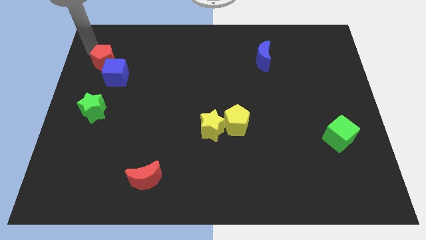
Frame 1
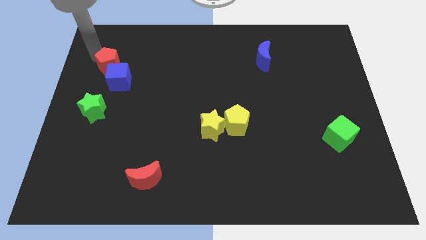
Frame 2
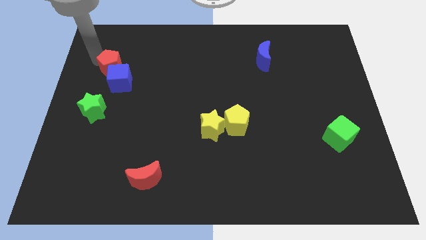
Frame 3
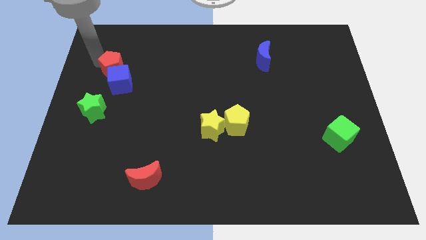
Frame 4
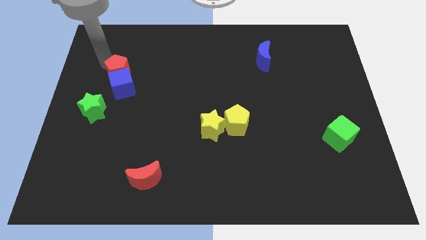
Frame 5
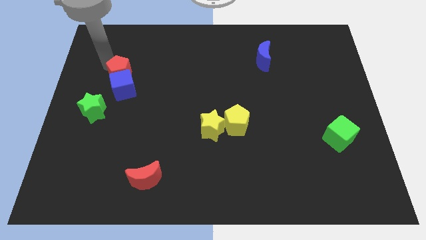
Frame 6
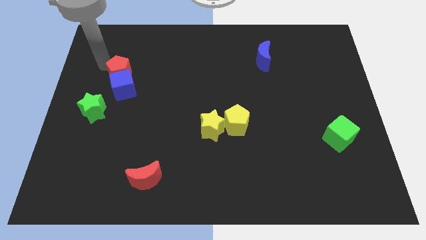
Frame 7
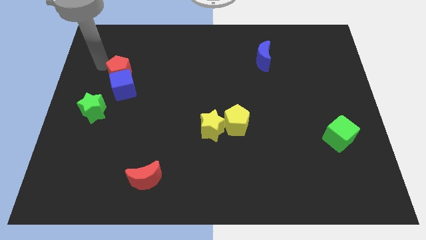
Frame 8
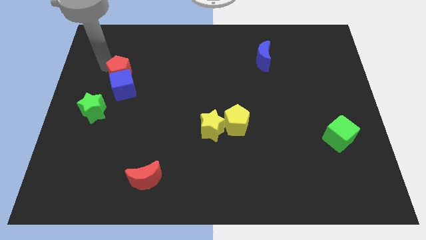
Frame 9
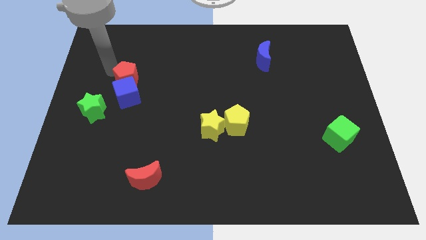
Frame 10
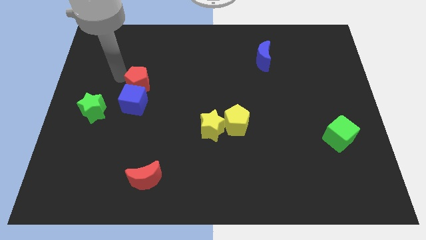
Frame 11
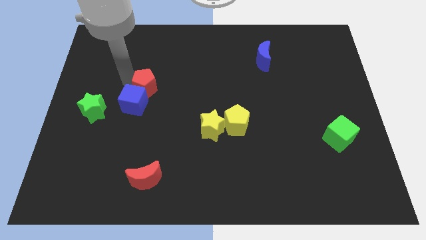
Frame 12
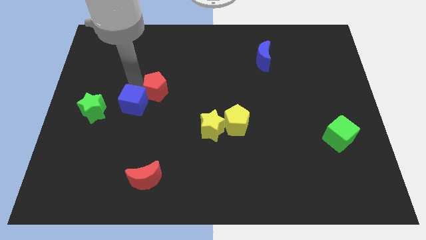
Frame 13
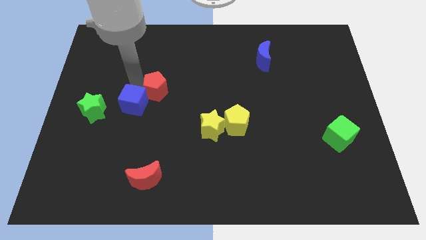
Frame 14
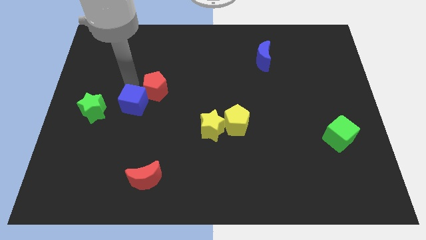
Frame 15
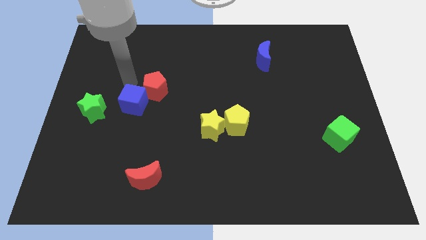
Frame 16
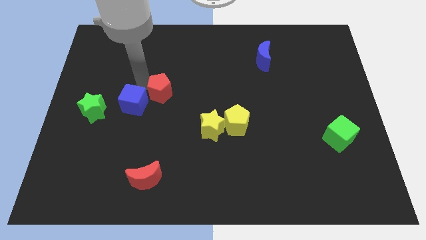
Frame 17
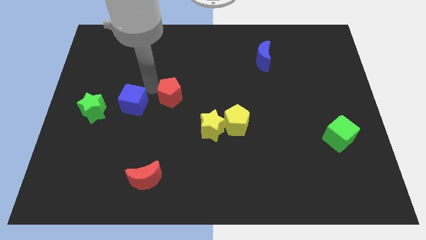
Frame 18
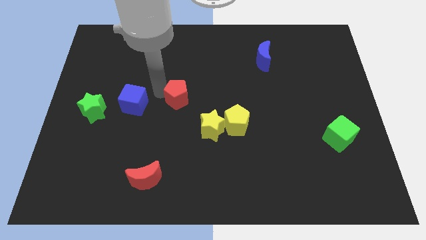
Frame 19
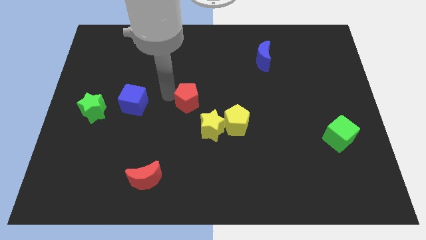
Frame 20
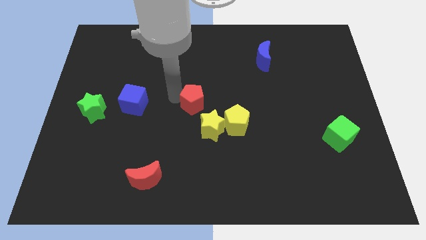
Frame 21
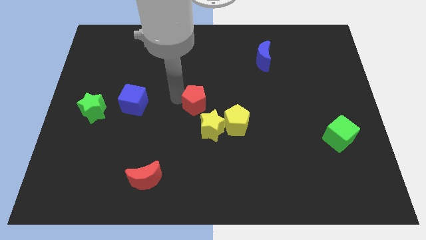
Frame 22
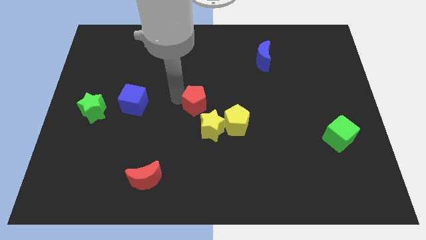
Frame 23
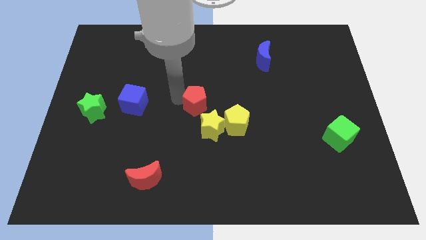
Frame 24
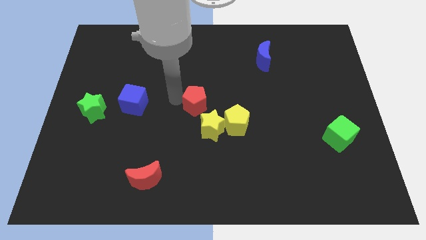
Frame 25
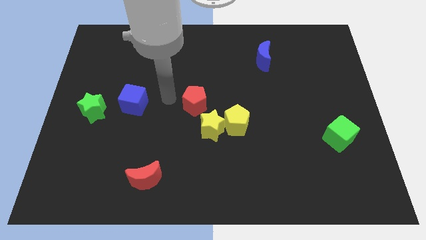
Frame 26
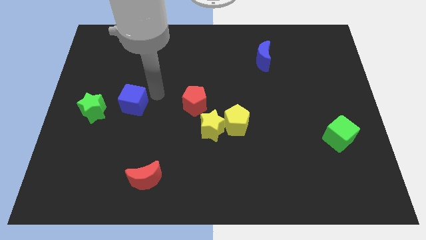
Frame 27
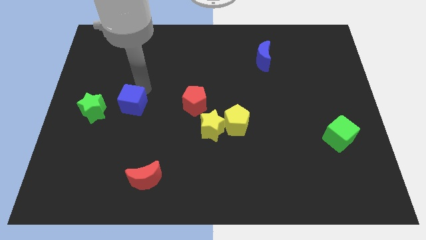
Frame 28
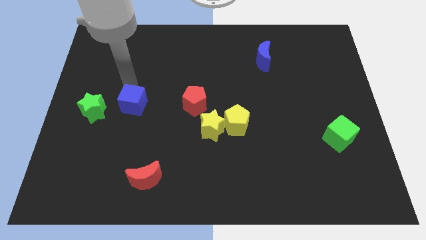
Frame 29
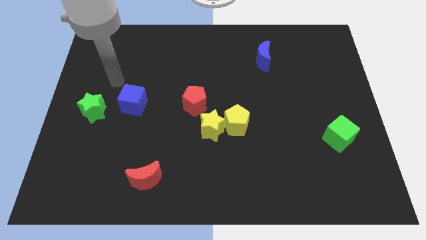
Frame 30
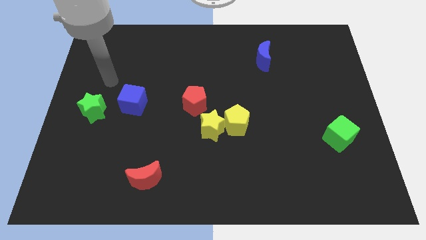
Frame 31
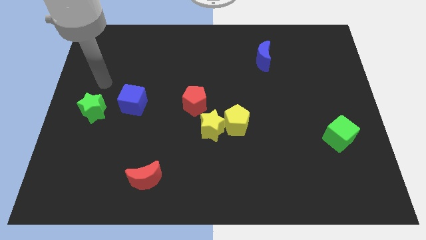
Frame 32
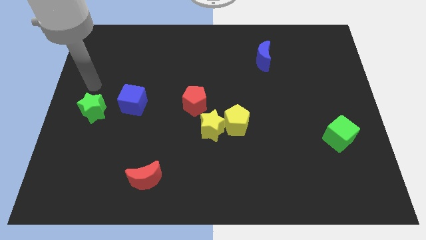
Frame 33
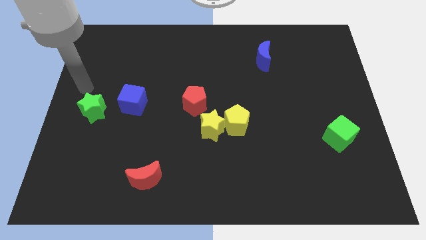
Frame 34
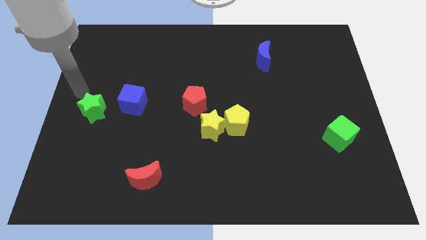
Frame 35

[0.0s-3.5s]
move the blue cube and red pentagon to the right side of the green star

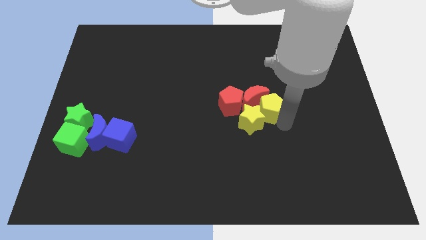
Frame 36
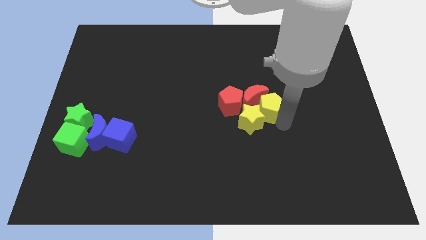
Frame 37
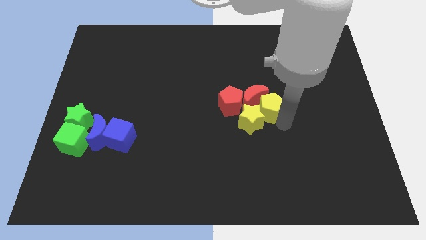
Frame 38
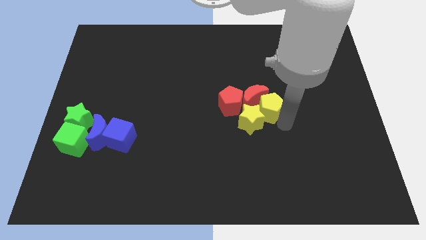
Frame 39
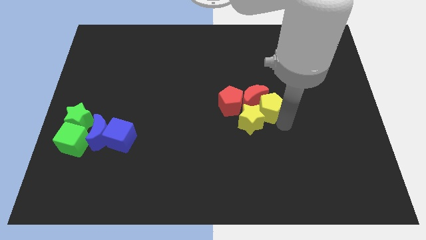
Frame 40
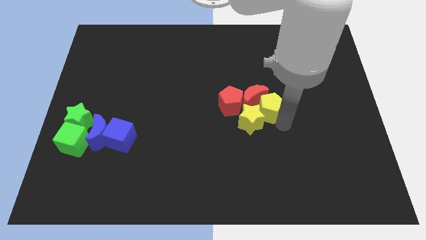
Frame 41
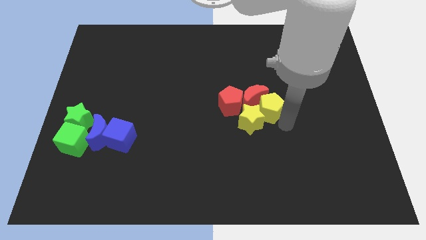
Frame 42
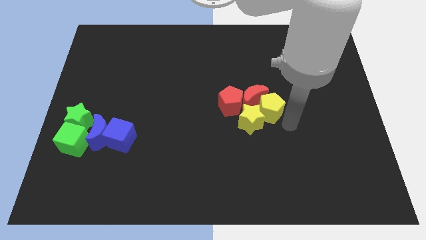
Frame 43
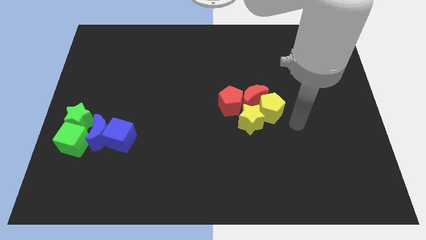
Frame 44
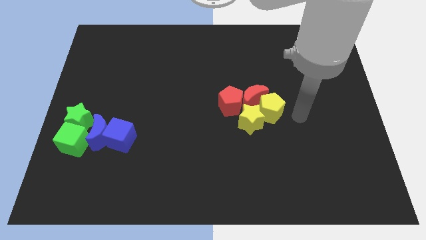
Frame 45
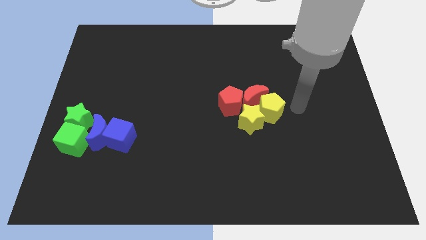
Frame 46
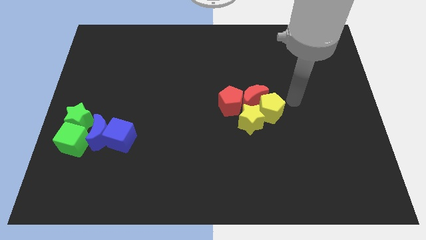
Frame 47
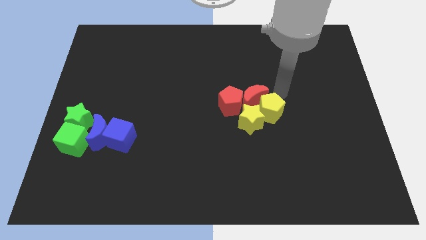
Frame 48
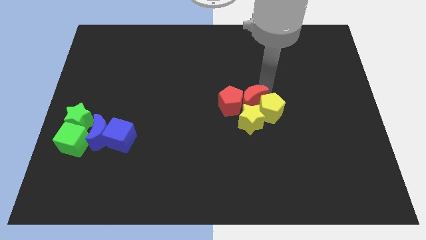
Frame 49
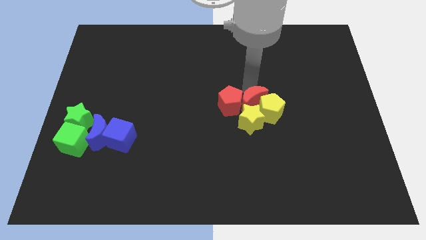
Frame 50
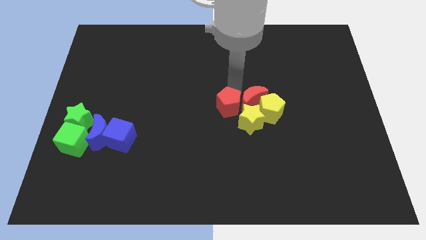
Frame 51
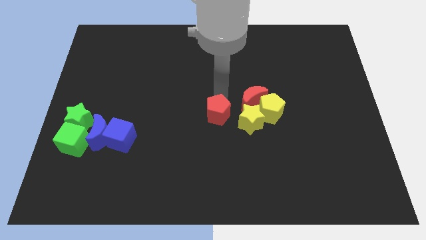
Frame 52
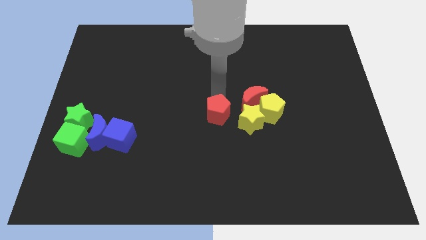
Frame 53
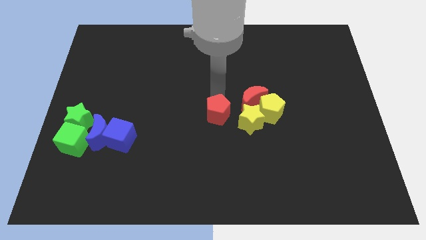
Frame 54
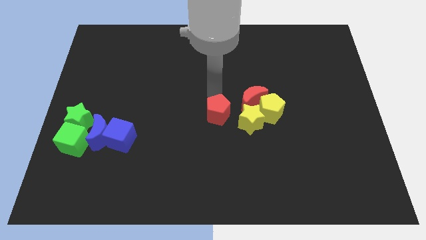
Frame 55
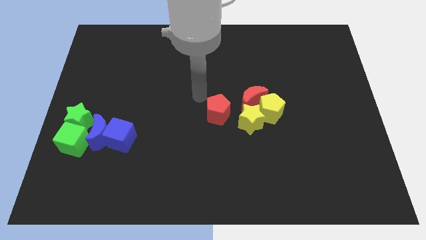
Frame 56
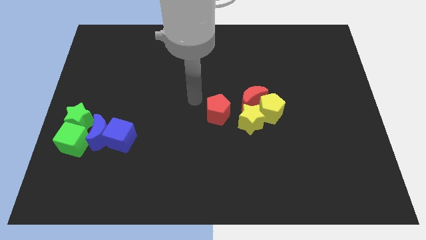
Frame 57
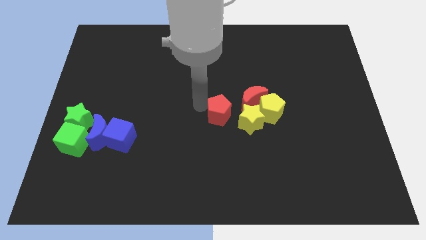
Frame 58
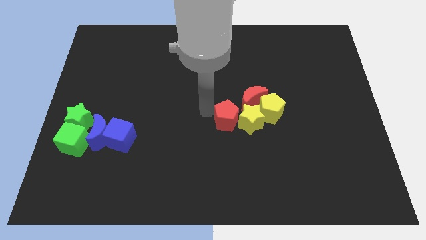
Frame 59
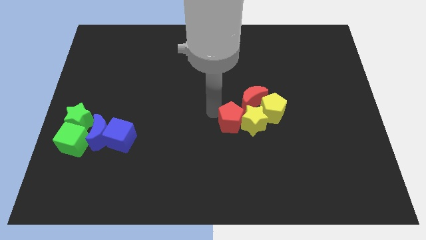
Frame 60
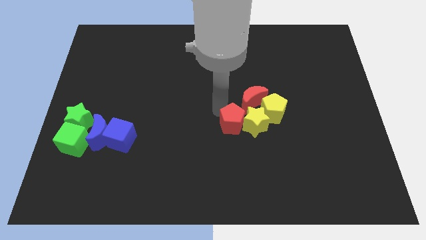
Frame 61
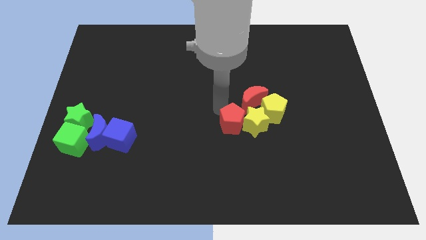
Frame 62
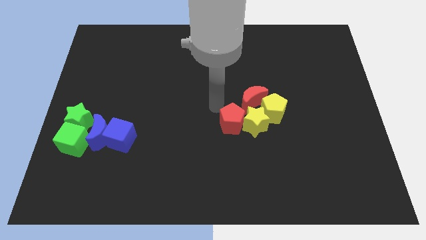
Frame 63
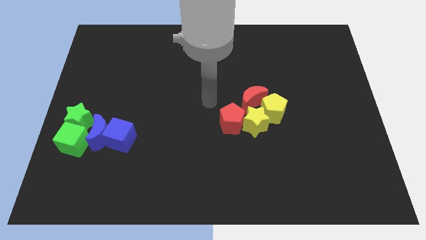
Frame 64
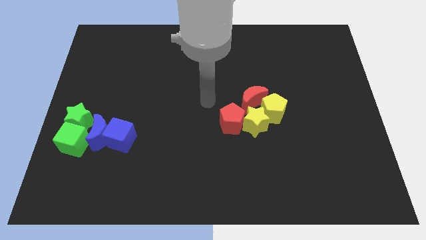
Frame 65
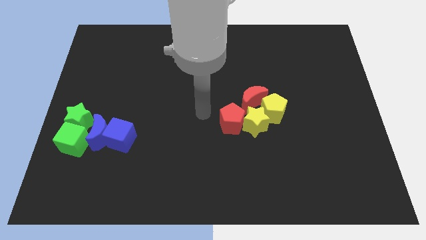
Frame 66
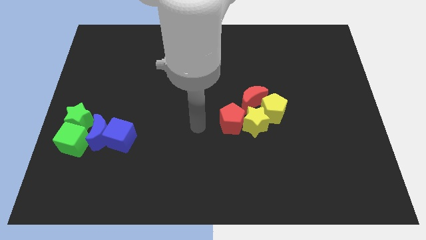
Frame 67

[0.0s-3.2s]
move the red pentagon to the top left of the yellow star

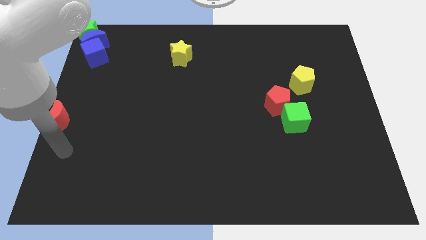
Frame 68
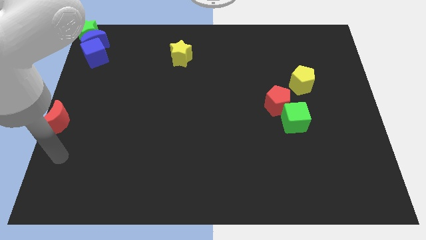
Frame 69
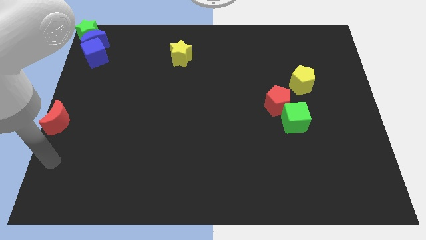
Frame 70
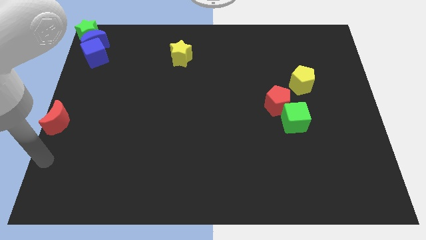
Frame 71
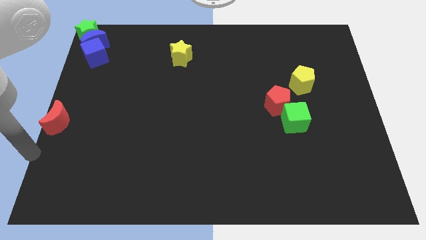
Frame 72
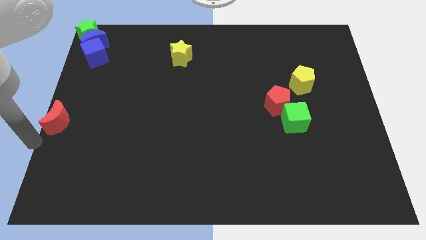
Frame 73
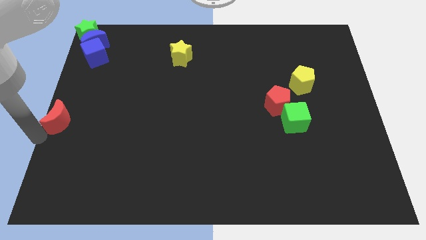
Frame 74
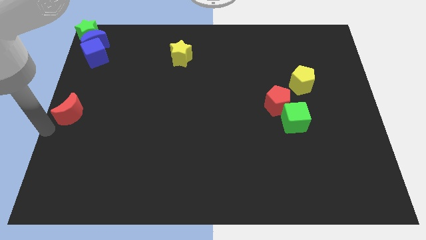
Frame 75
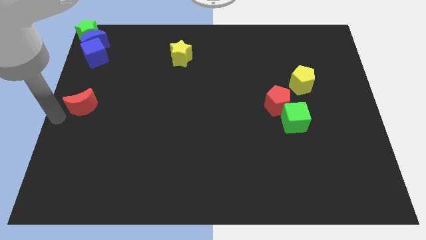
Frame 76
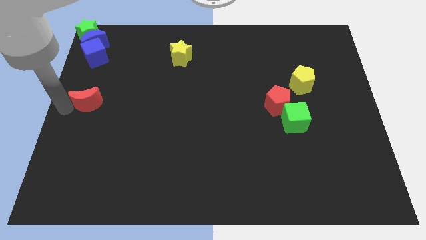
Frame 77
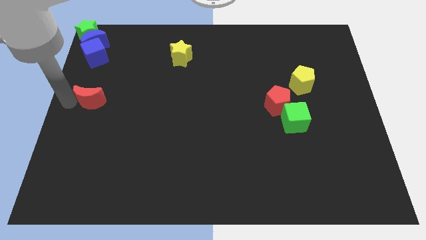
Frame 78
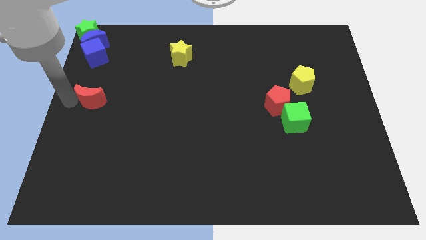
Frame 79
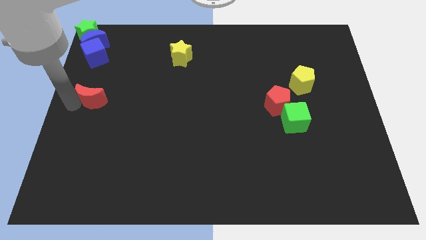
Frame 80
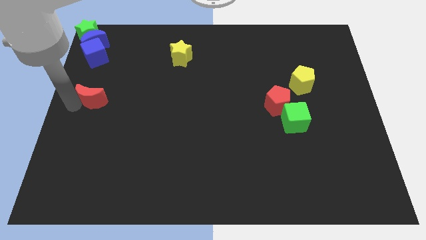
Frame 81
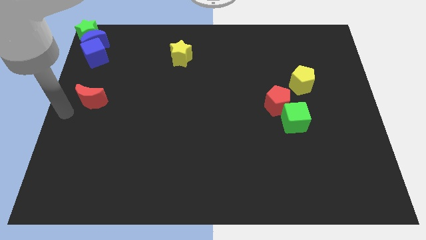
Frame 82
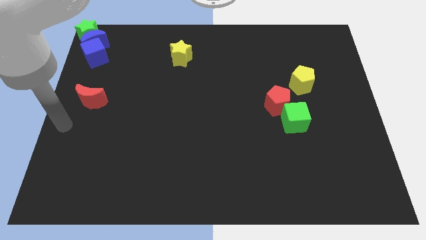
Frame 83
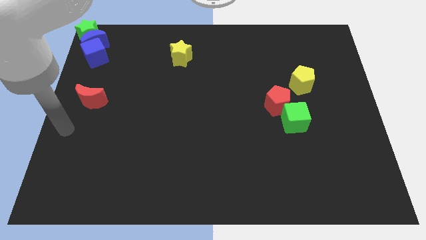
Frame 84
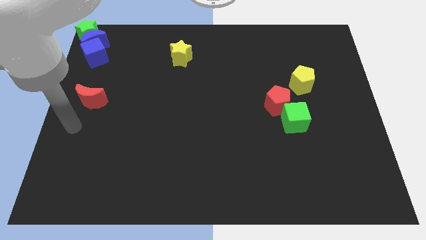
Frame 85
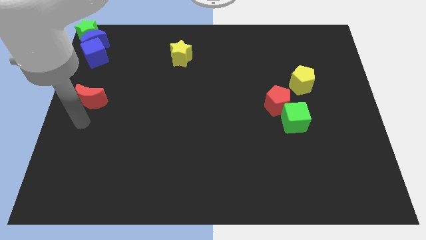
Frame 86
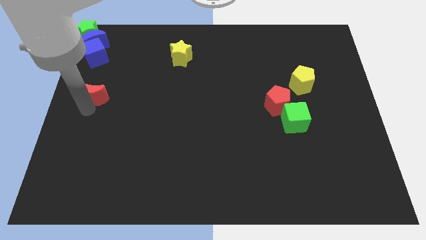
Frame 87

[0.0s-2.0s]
place the red moon below the blue cube

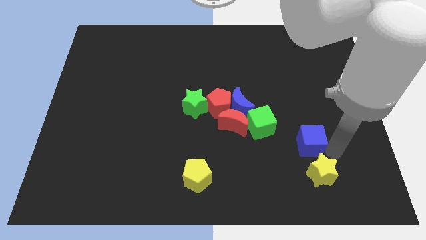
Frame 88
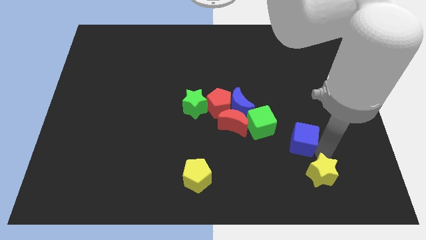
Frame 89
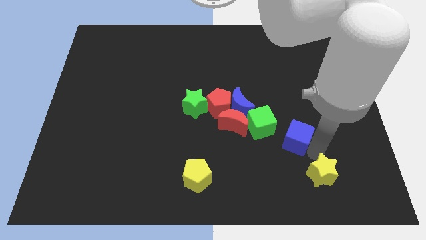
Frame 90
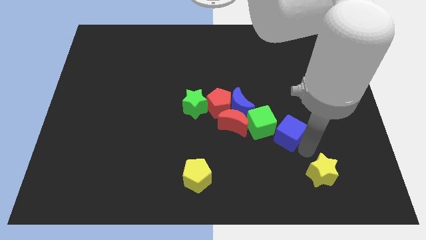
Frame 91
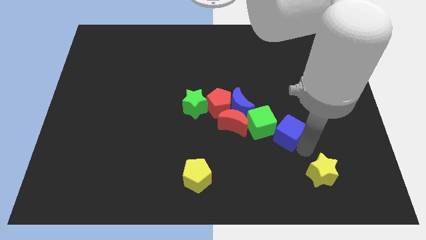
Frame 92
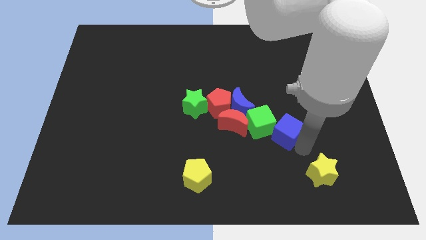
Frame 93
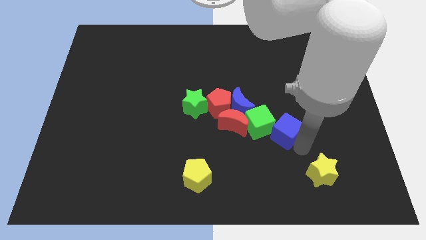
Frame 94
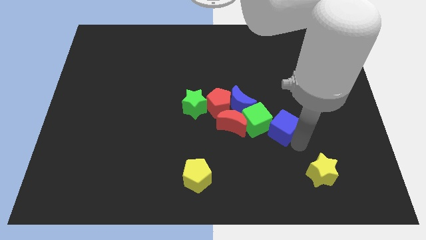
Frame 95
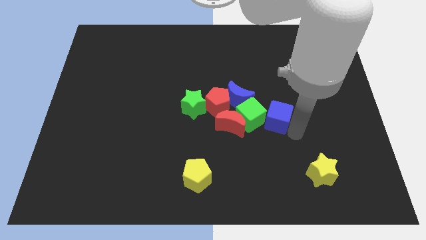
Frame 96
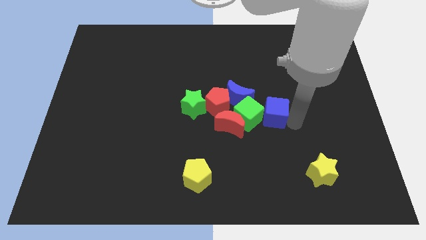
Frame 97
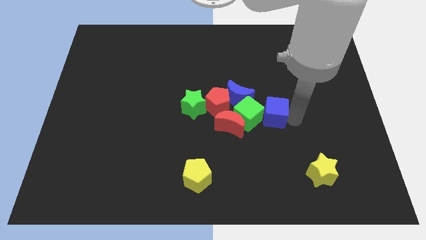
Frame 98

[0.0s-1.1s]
push the blue cube into the green cube
